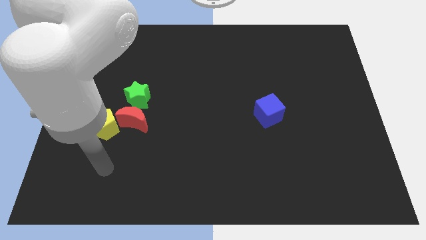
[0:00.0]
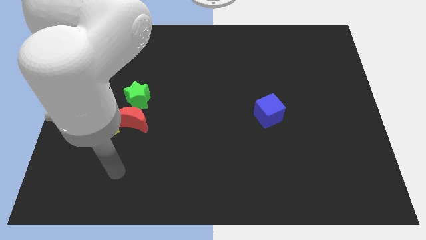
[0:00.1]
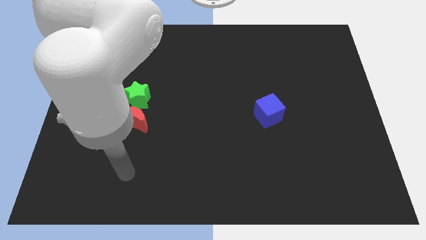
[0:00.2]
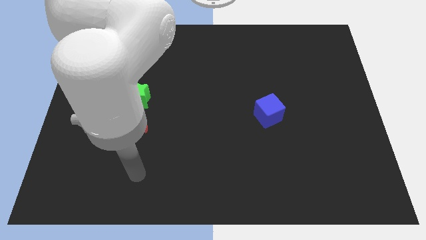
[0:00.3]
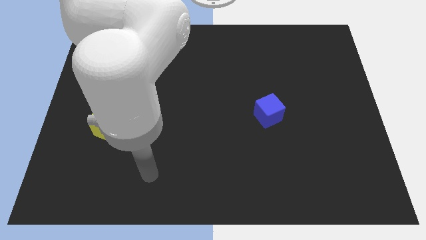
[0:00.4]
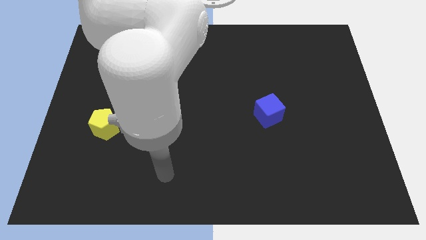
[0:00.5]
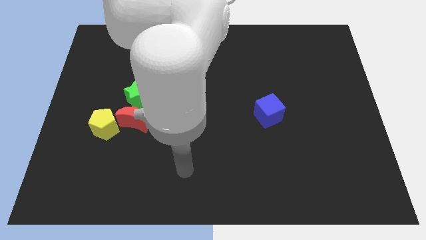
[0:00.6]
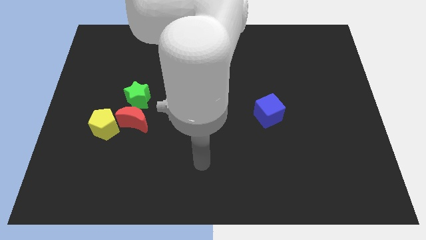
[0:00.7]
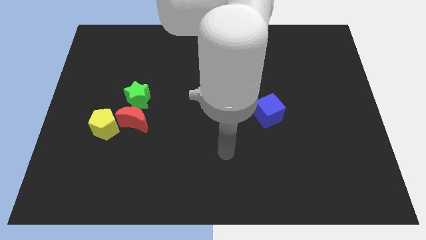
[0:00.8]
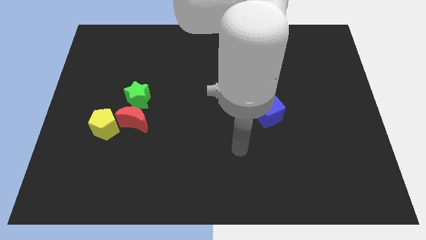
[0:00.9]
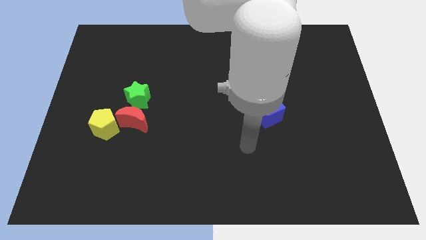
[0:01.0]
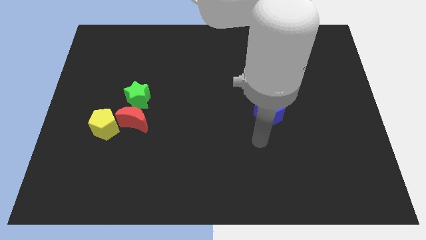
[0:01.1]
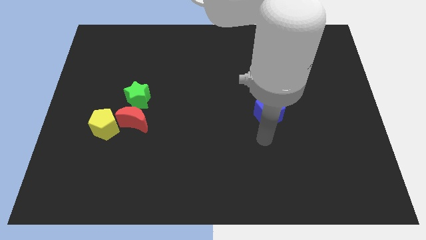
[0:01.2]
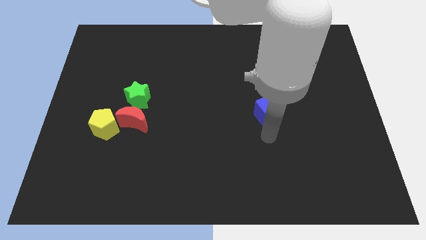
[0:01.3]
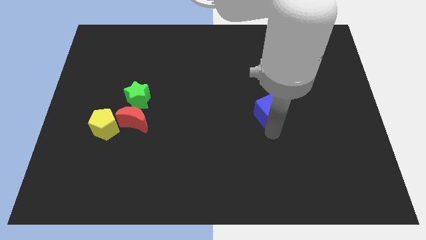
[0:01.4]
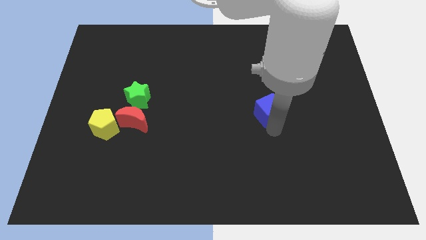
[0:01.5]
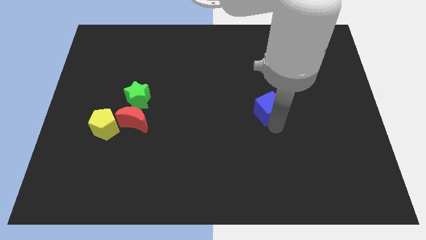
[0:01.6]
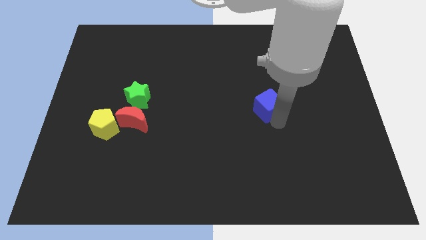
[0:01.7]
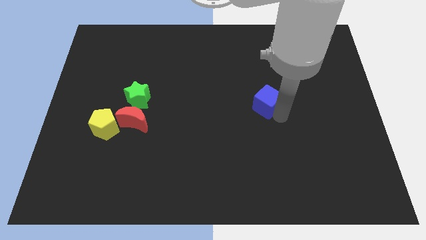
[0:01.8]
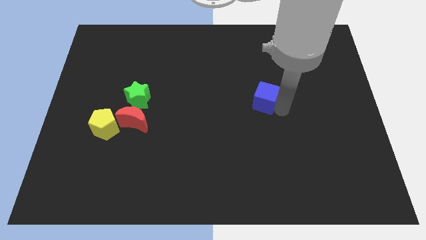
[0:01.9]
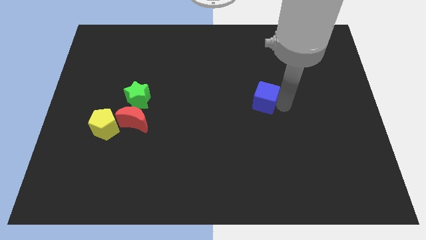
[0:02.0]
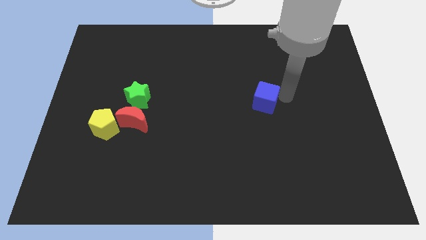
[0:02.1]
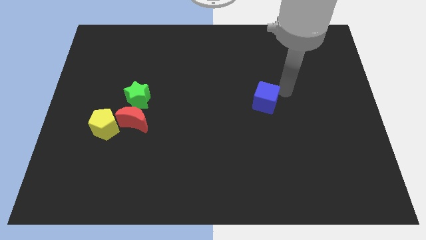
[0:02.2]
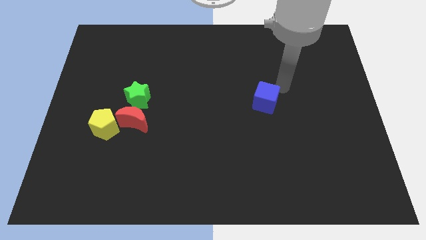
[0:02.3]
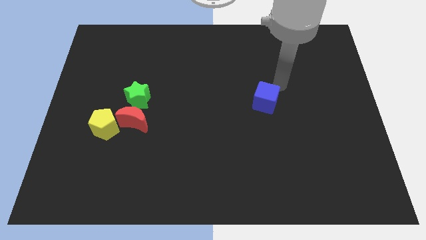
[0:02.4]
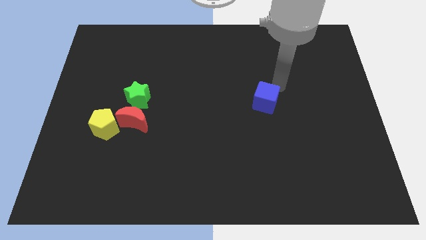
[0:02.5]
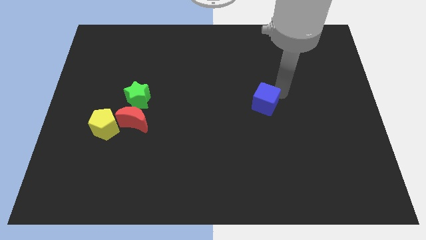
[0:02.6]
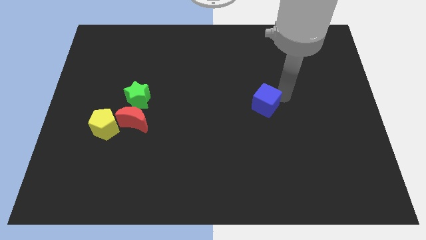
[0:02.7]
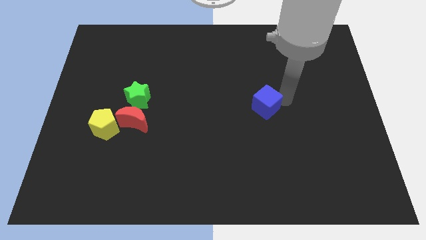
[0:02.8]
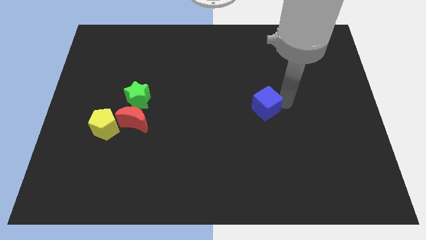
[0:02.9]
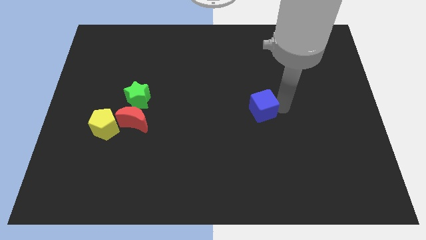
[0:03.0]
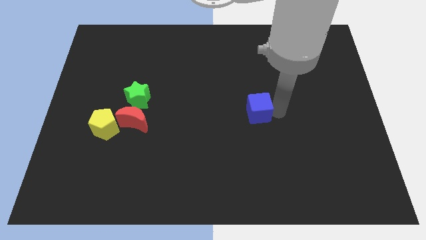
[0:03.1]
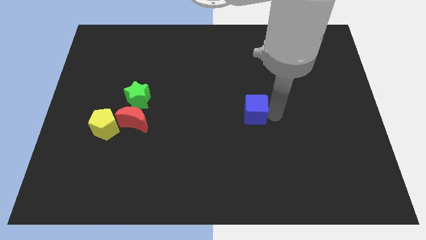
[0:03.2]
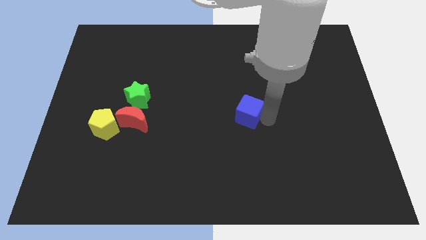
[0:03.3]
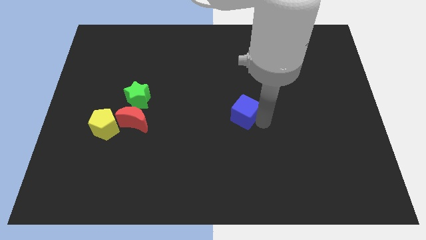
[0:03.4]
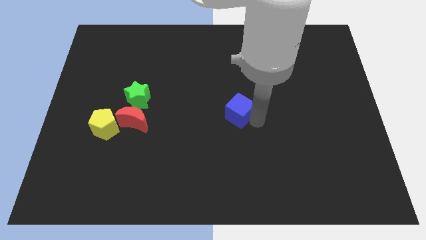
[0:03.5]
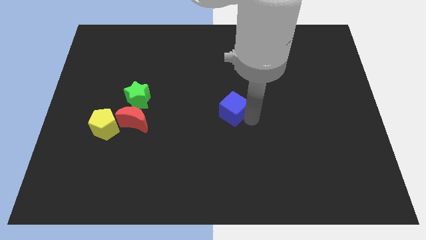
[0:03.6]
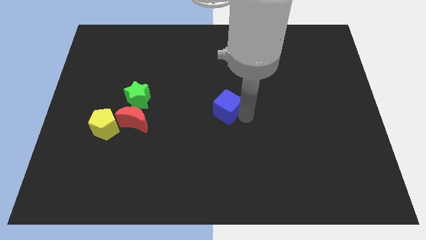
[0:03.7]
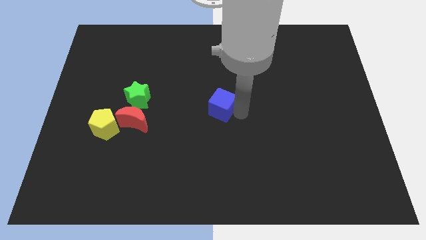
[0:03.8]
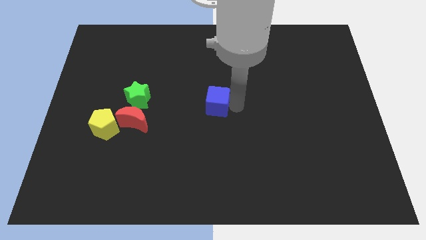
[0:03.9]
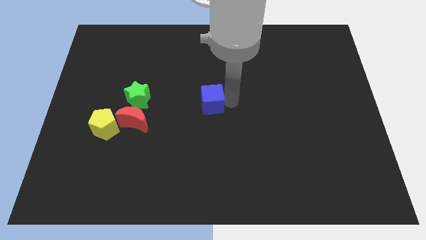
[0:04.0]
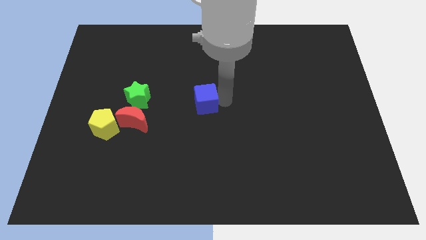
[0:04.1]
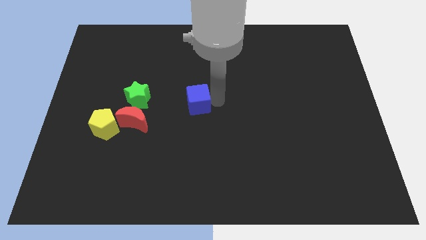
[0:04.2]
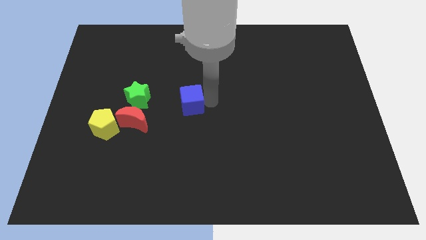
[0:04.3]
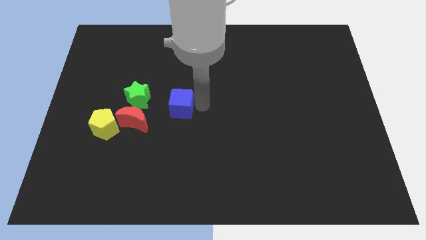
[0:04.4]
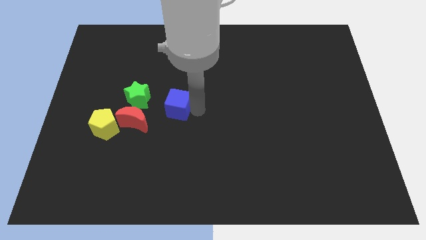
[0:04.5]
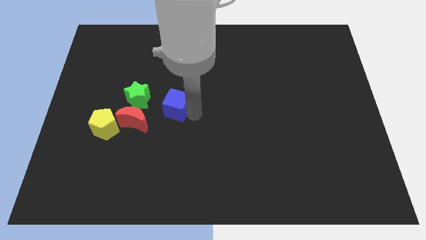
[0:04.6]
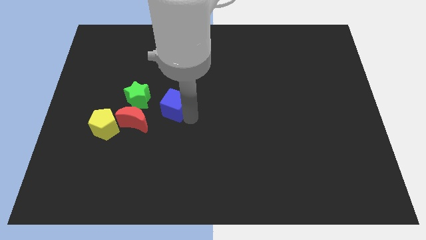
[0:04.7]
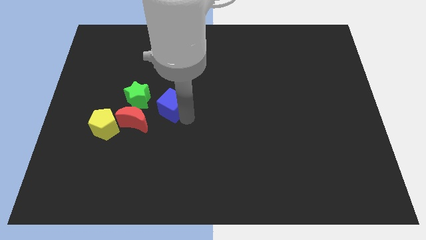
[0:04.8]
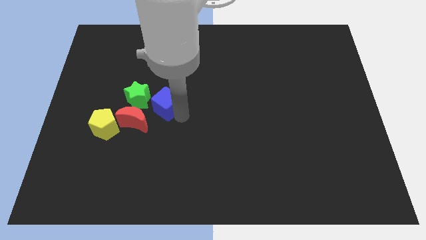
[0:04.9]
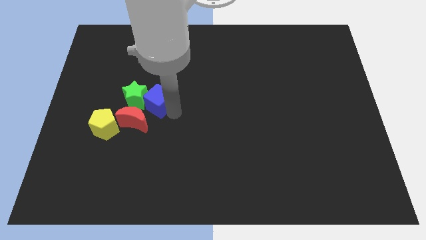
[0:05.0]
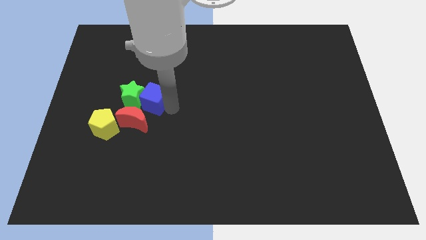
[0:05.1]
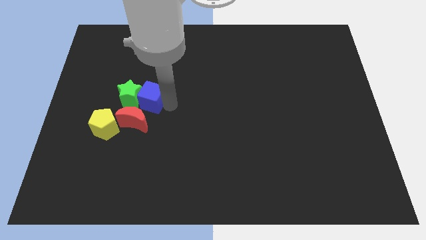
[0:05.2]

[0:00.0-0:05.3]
move the blue cube towards the star

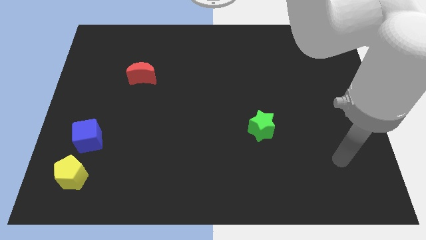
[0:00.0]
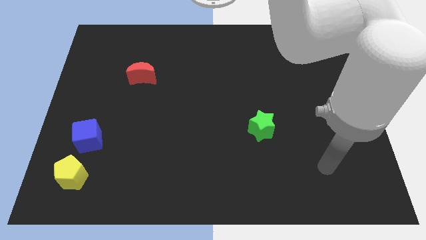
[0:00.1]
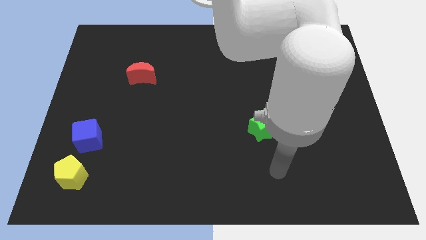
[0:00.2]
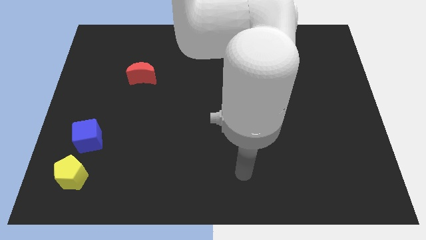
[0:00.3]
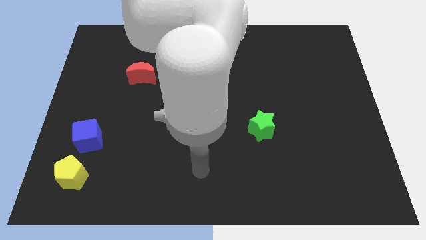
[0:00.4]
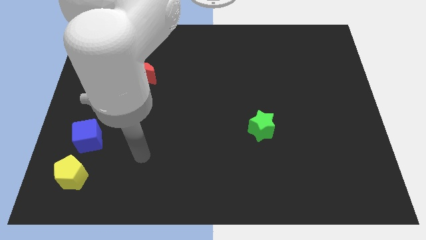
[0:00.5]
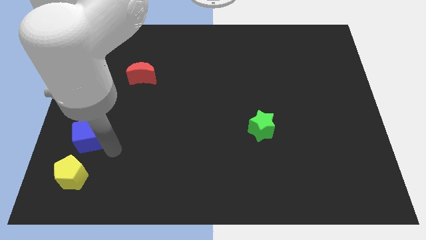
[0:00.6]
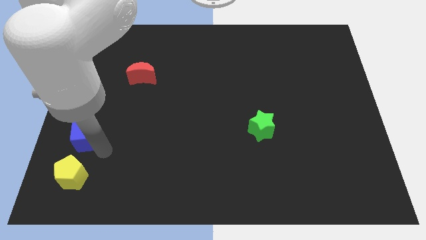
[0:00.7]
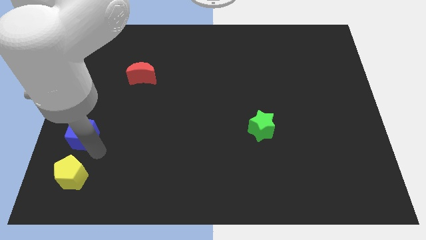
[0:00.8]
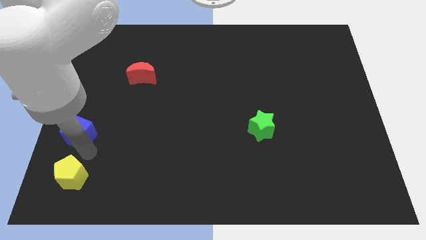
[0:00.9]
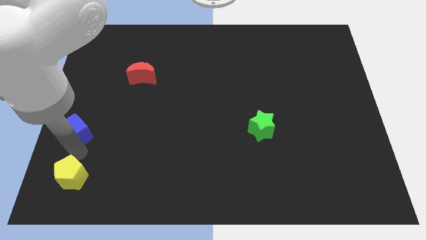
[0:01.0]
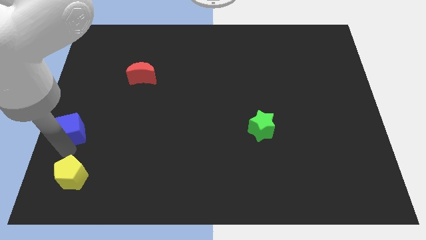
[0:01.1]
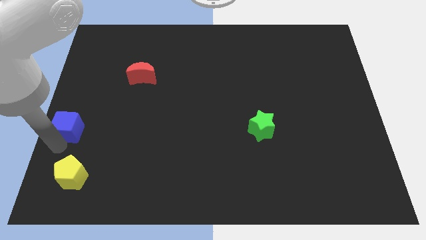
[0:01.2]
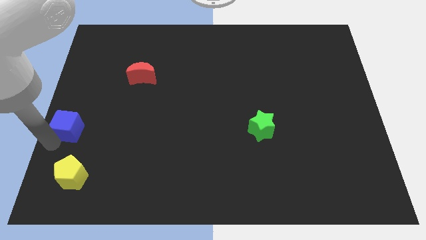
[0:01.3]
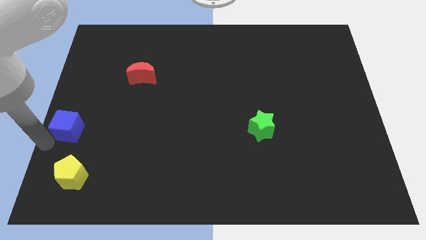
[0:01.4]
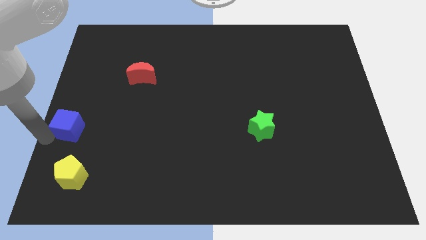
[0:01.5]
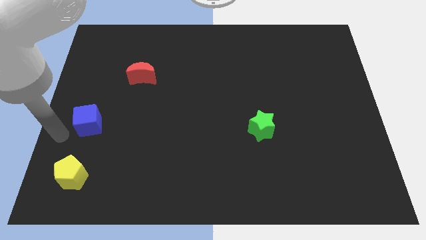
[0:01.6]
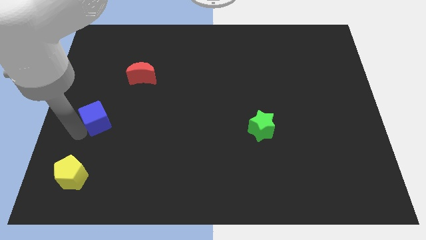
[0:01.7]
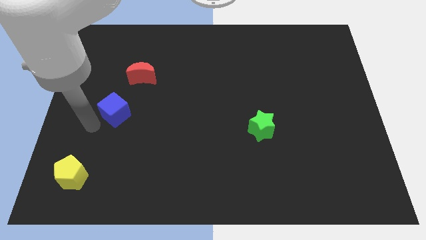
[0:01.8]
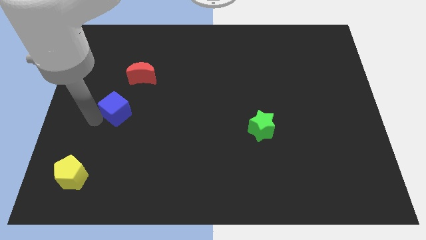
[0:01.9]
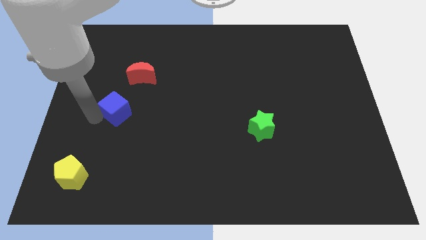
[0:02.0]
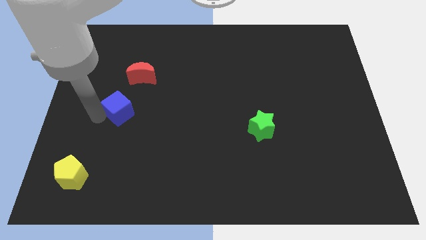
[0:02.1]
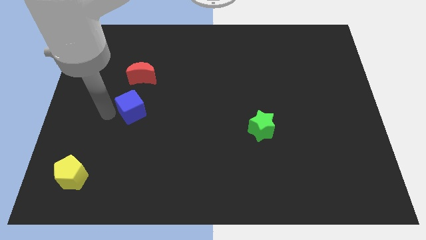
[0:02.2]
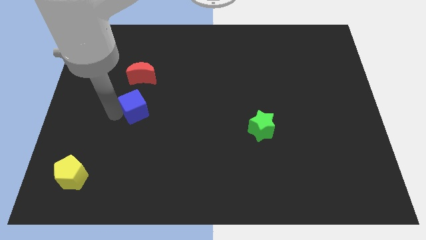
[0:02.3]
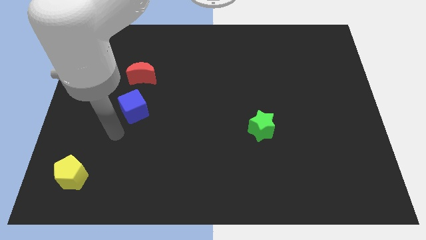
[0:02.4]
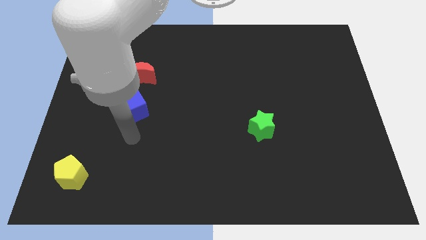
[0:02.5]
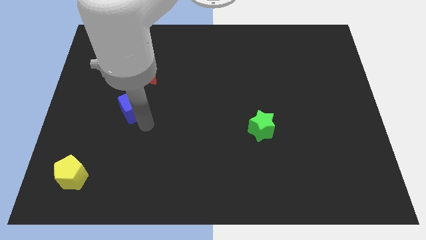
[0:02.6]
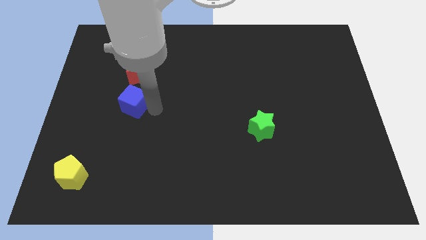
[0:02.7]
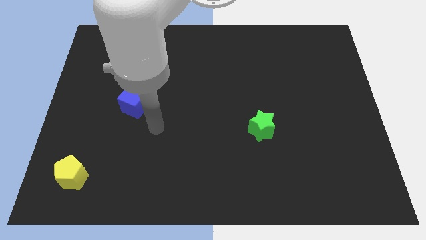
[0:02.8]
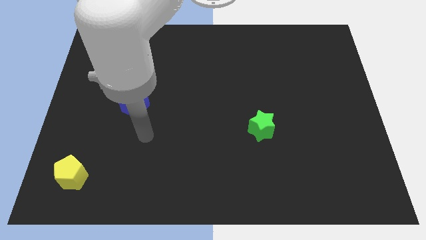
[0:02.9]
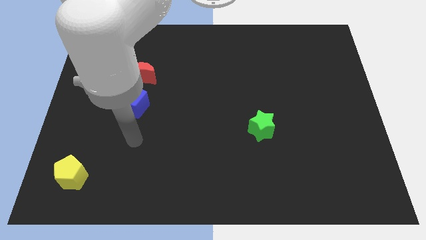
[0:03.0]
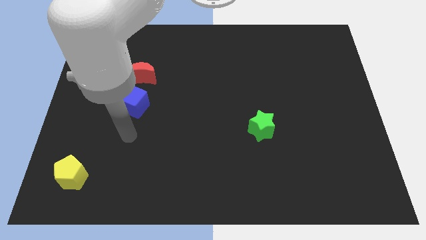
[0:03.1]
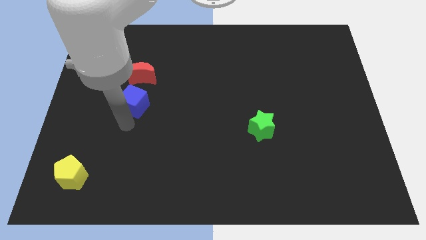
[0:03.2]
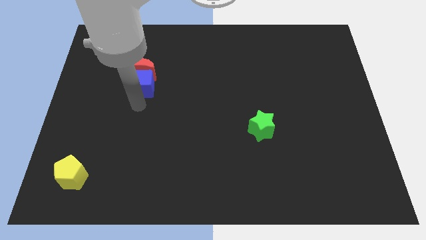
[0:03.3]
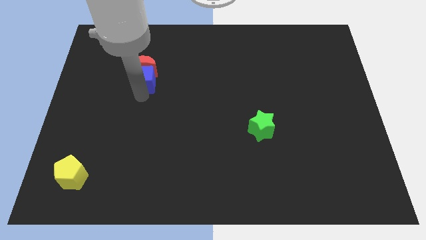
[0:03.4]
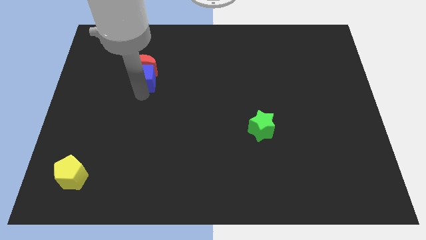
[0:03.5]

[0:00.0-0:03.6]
slide the blue cube close to the red block

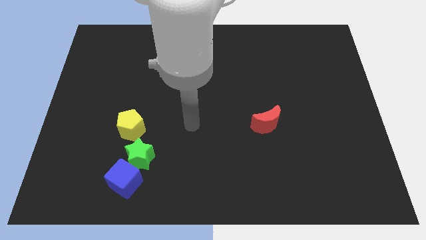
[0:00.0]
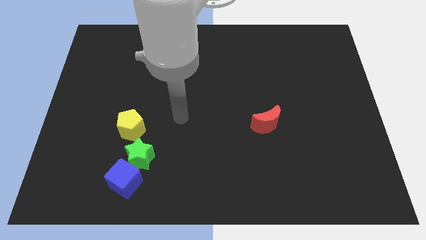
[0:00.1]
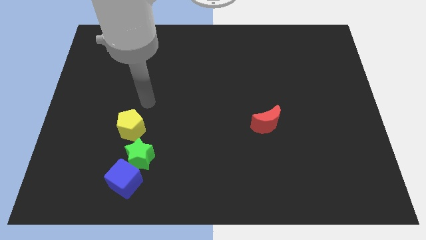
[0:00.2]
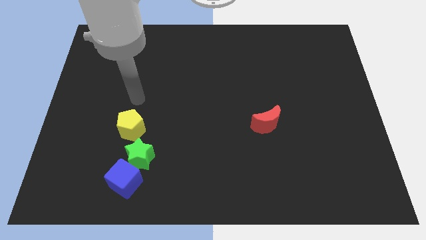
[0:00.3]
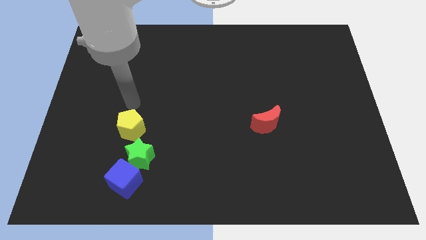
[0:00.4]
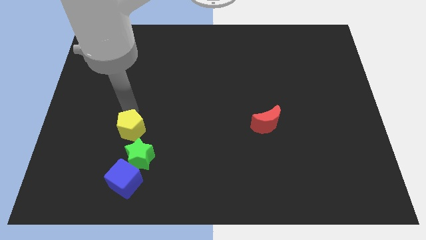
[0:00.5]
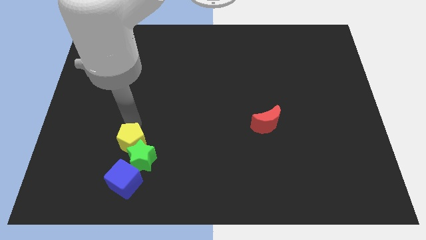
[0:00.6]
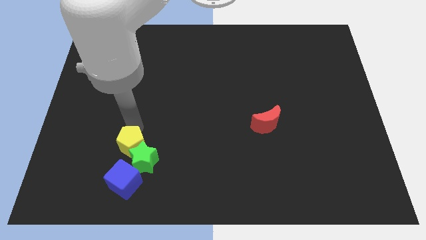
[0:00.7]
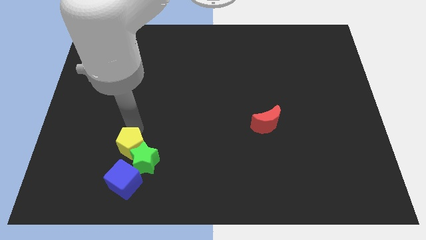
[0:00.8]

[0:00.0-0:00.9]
put the yellow pentagon towards the green block
